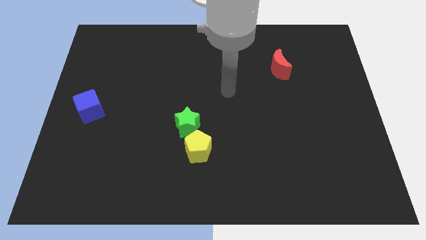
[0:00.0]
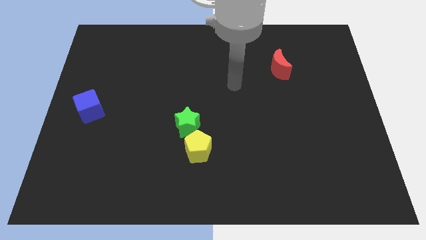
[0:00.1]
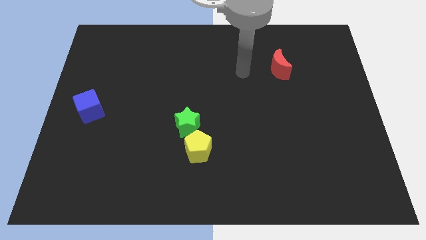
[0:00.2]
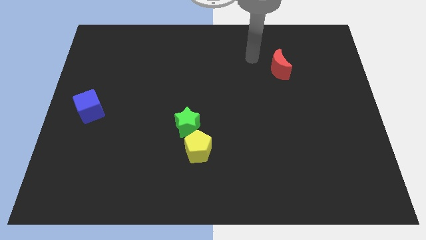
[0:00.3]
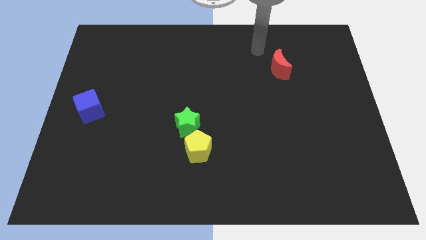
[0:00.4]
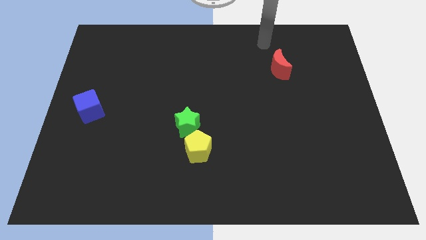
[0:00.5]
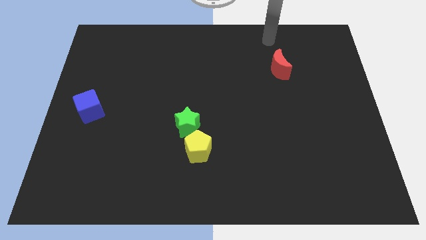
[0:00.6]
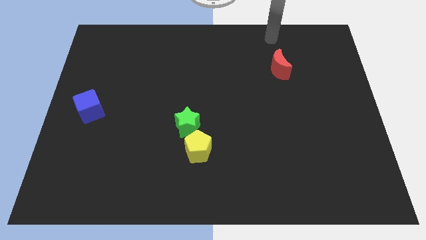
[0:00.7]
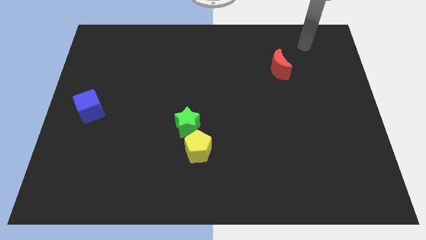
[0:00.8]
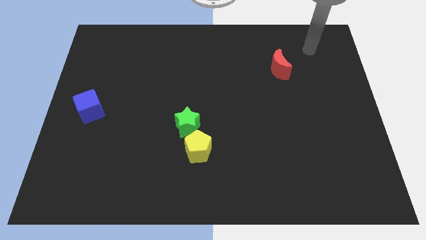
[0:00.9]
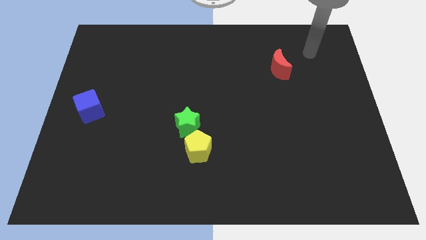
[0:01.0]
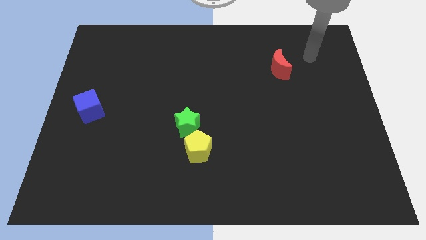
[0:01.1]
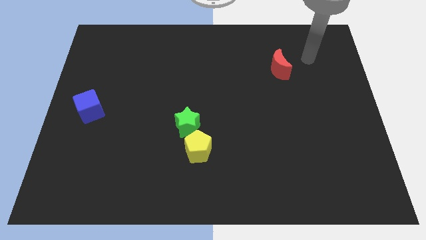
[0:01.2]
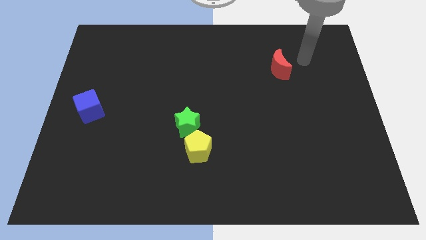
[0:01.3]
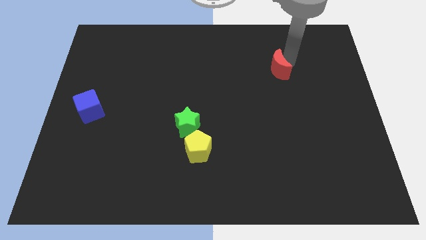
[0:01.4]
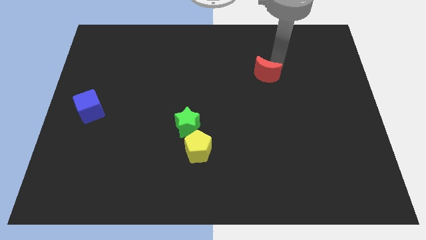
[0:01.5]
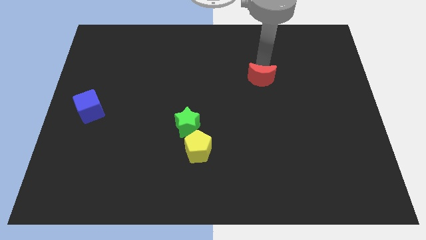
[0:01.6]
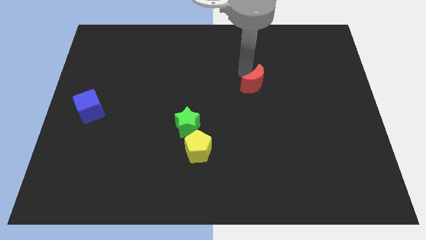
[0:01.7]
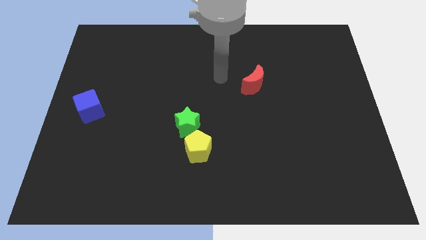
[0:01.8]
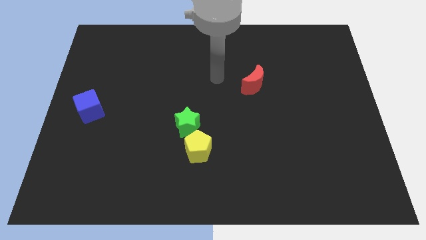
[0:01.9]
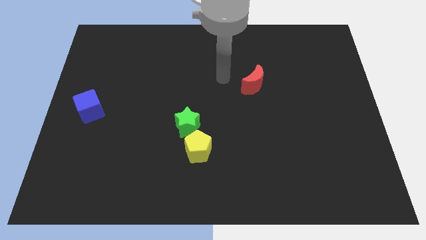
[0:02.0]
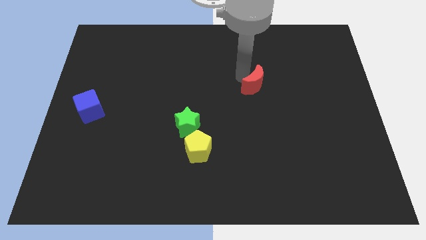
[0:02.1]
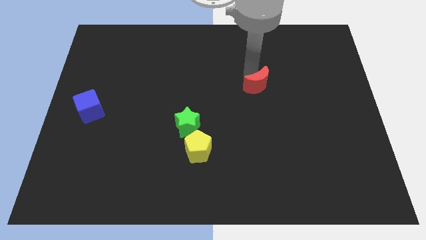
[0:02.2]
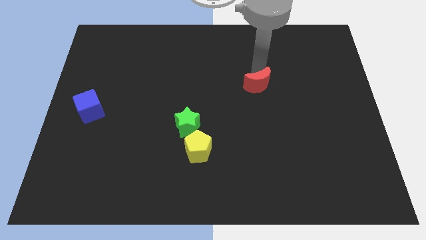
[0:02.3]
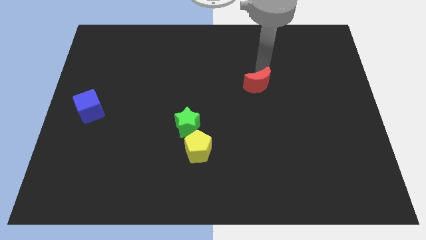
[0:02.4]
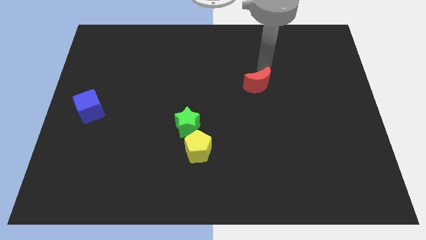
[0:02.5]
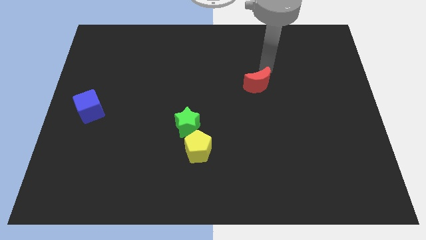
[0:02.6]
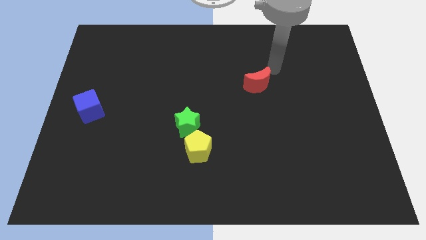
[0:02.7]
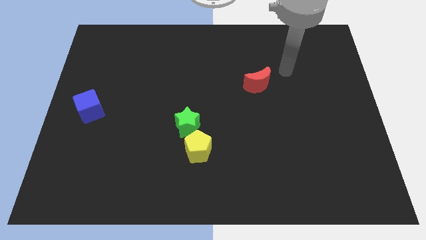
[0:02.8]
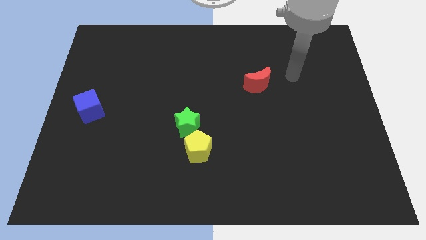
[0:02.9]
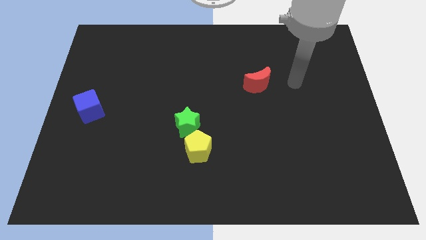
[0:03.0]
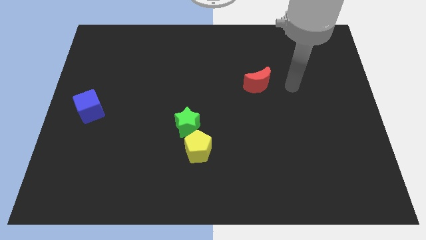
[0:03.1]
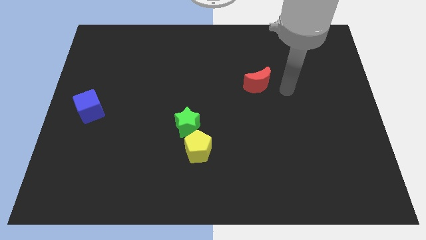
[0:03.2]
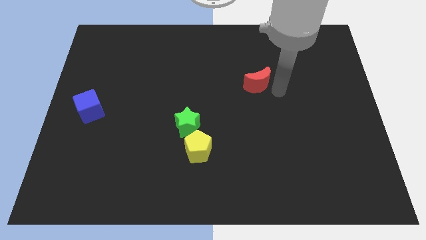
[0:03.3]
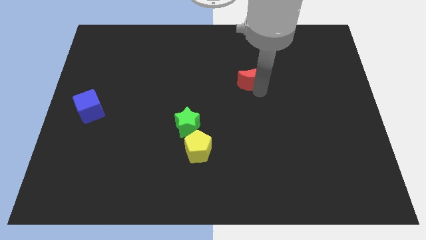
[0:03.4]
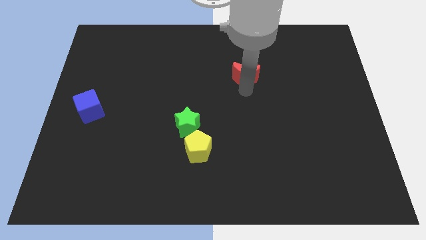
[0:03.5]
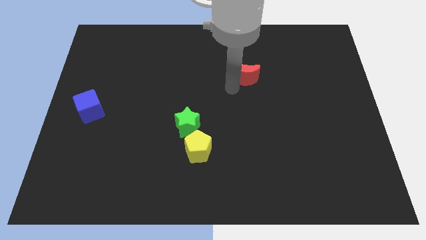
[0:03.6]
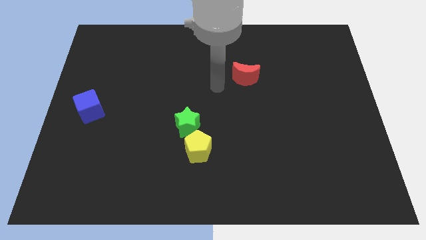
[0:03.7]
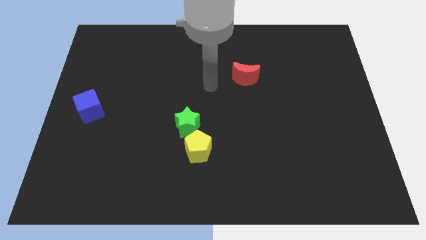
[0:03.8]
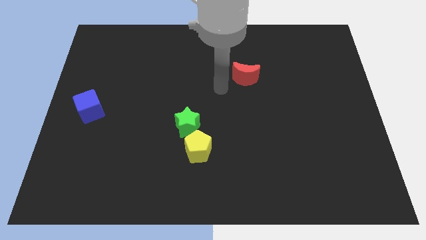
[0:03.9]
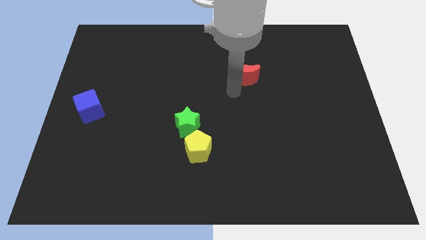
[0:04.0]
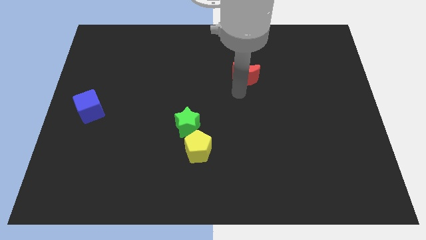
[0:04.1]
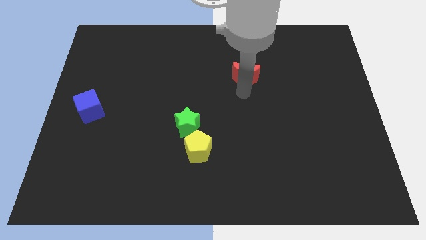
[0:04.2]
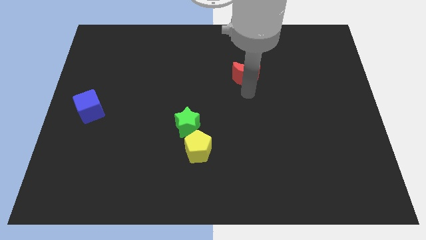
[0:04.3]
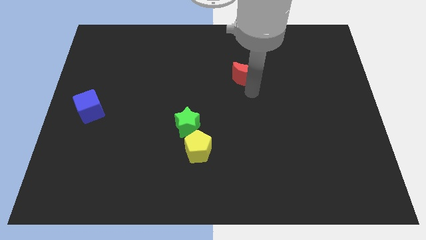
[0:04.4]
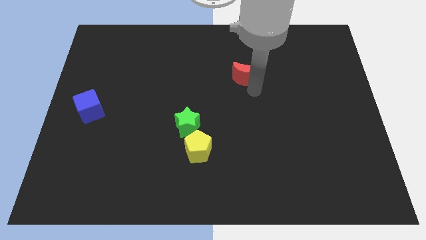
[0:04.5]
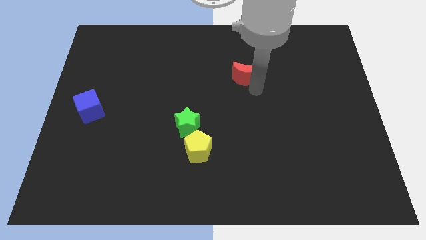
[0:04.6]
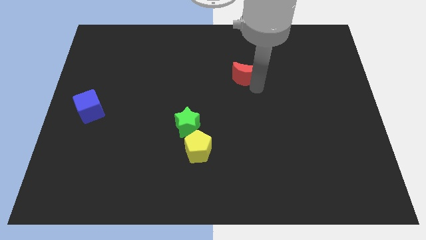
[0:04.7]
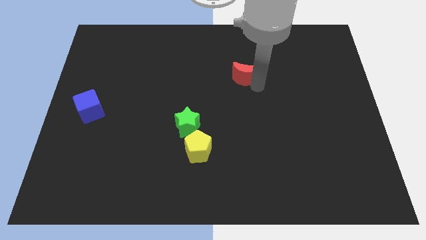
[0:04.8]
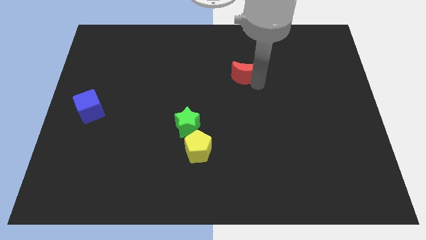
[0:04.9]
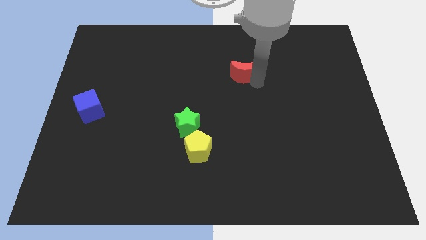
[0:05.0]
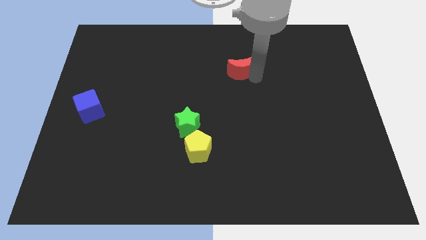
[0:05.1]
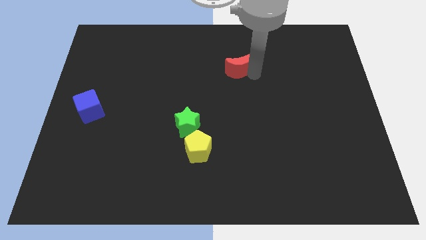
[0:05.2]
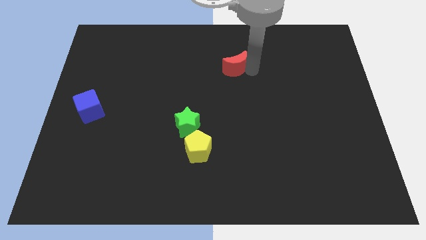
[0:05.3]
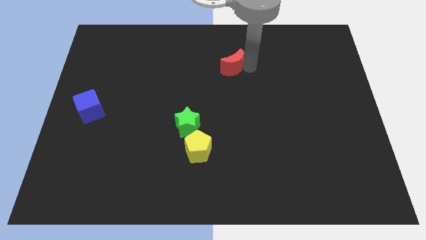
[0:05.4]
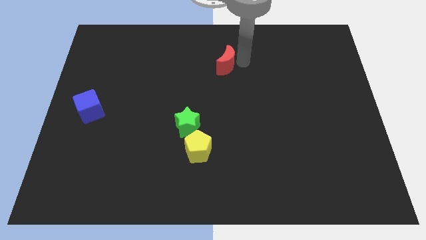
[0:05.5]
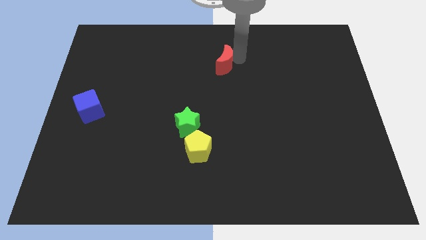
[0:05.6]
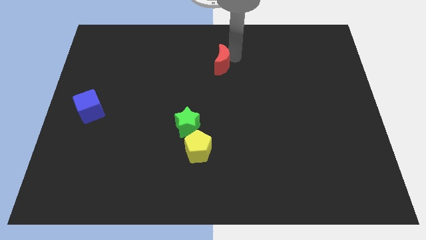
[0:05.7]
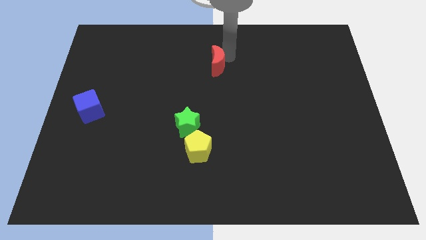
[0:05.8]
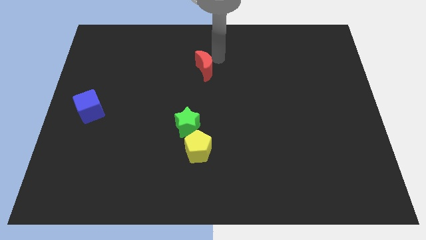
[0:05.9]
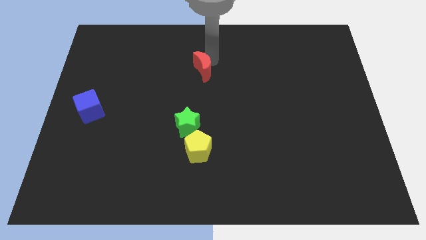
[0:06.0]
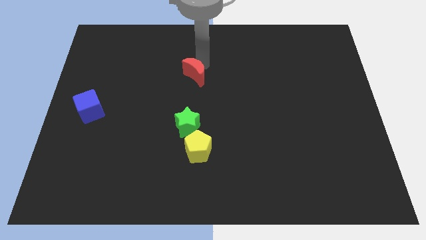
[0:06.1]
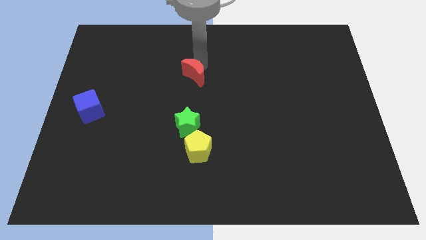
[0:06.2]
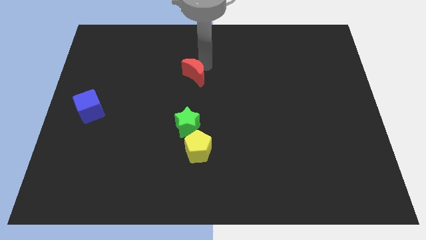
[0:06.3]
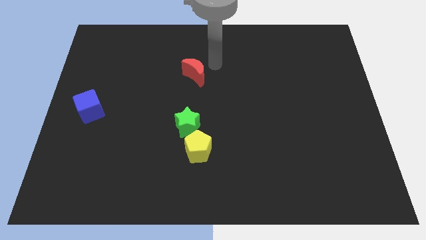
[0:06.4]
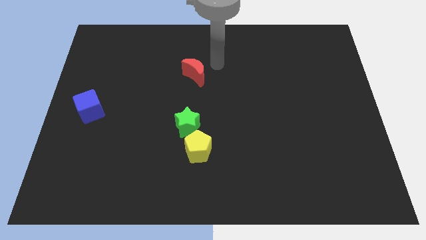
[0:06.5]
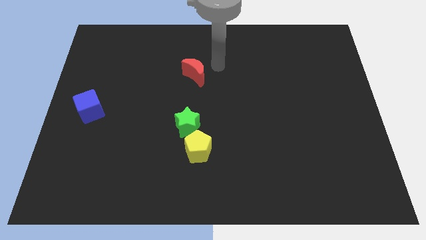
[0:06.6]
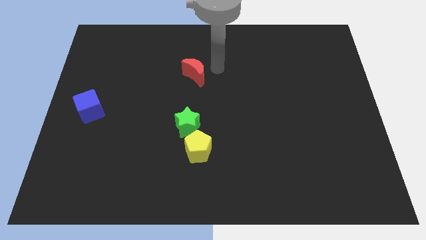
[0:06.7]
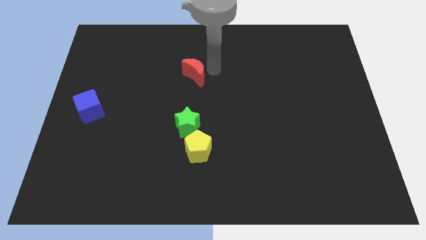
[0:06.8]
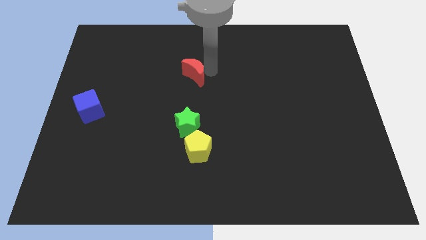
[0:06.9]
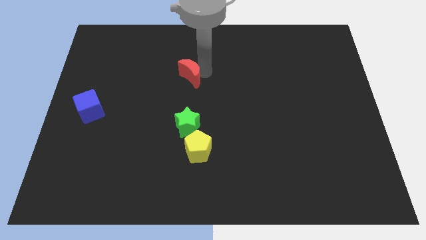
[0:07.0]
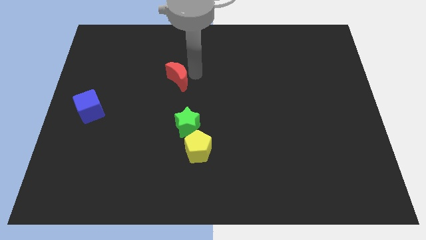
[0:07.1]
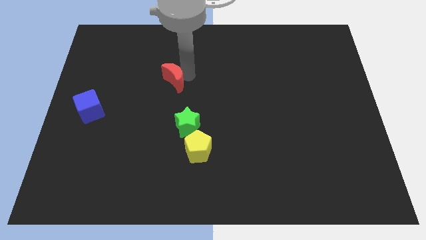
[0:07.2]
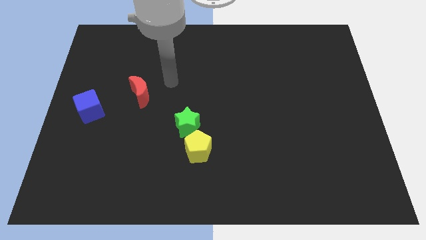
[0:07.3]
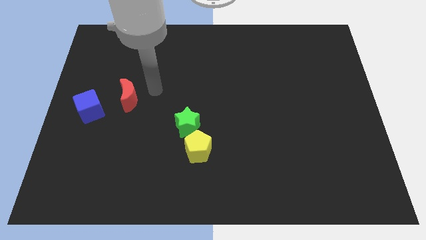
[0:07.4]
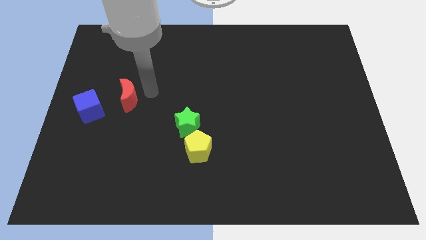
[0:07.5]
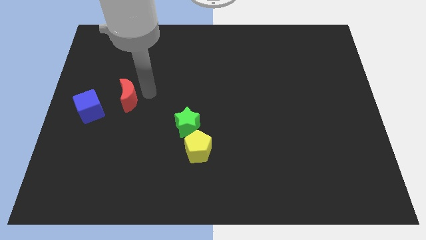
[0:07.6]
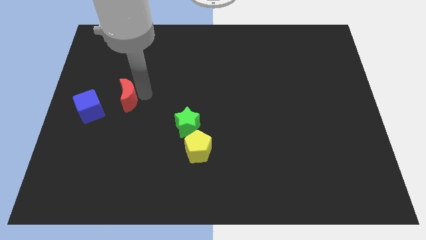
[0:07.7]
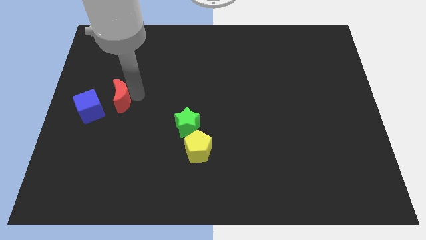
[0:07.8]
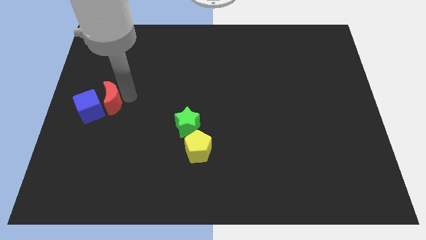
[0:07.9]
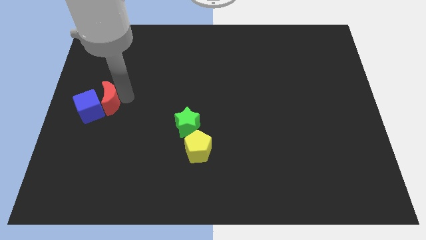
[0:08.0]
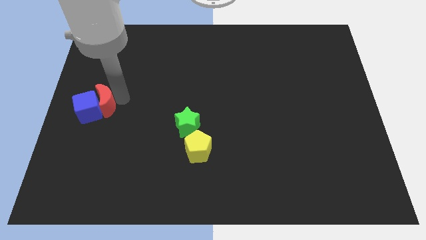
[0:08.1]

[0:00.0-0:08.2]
put the red moon close to the cube

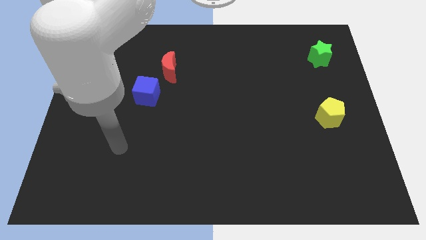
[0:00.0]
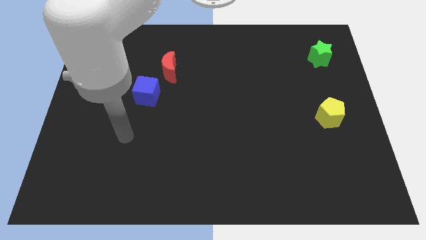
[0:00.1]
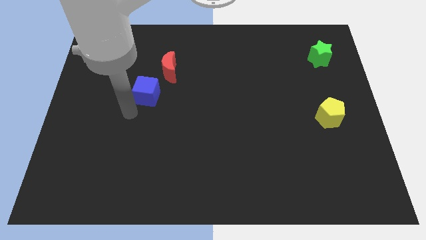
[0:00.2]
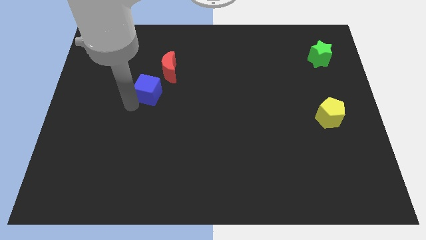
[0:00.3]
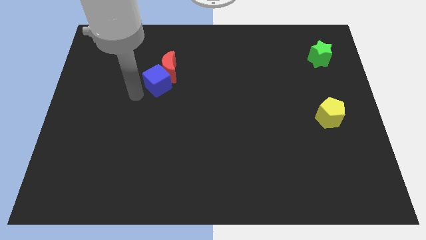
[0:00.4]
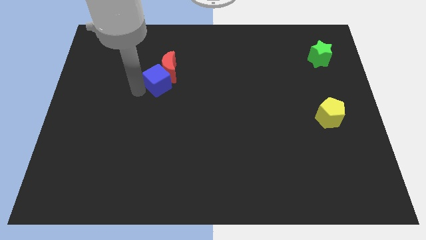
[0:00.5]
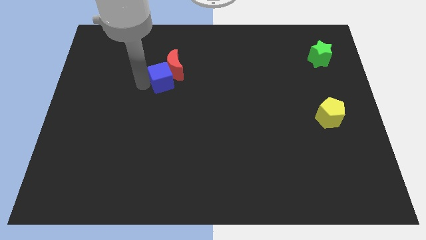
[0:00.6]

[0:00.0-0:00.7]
slide the cube to the red moon
